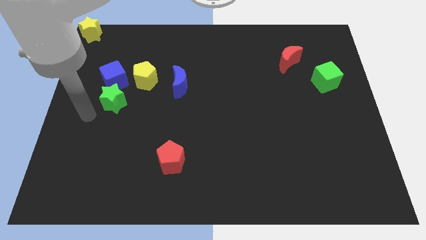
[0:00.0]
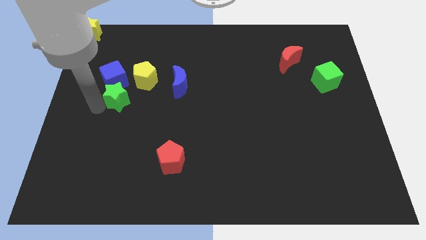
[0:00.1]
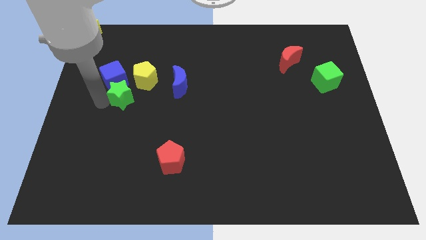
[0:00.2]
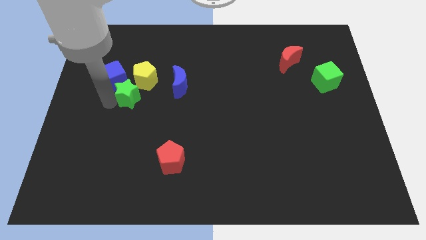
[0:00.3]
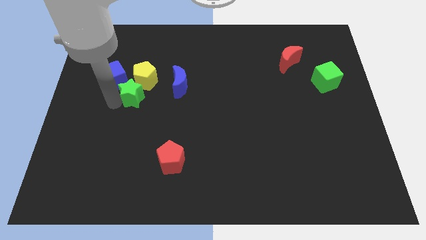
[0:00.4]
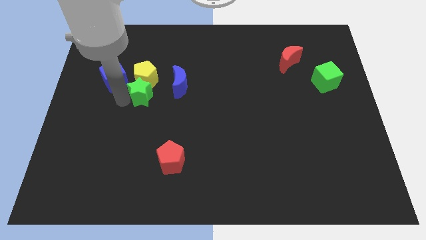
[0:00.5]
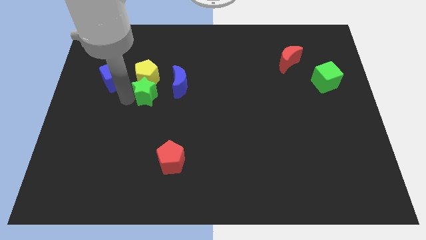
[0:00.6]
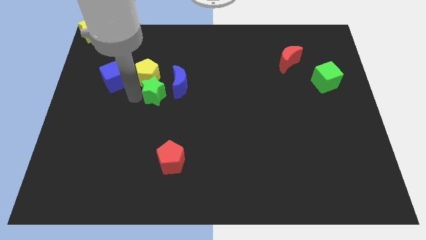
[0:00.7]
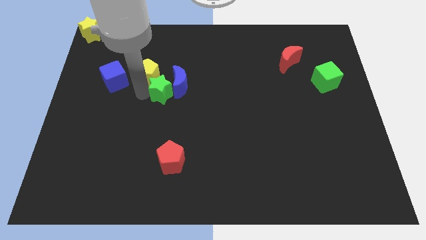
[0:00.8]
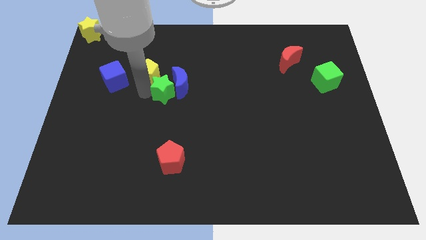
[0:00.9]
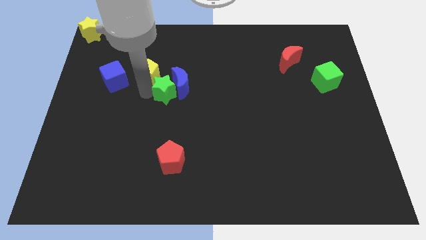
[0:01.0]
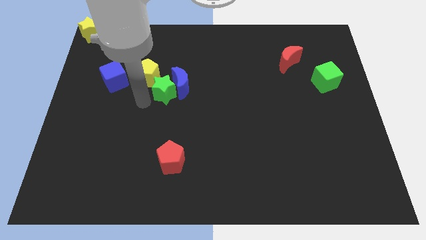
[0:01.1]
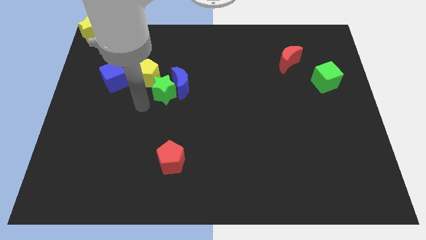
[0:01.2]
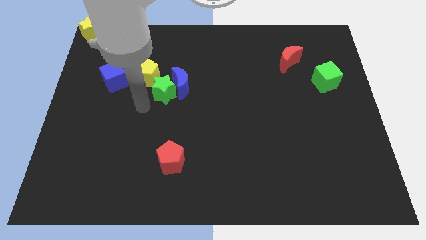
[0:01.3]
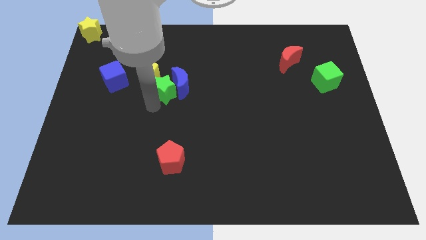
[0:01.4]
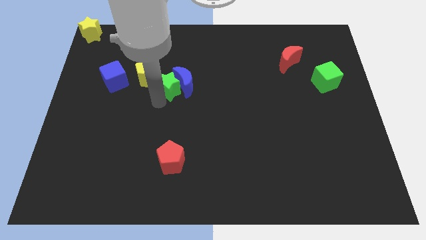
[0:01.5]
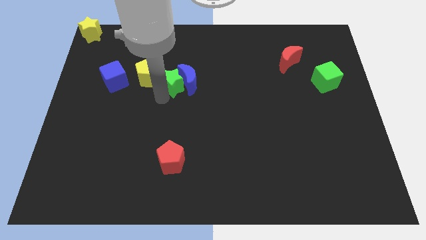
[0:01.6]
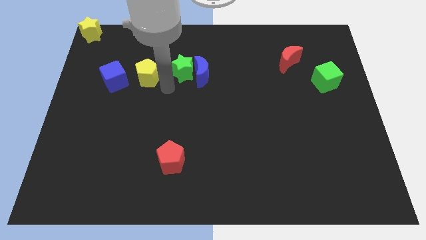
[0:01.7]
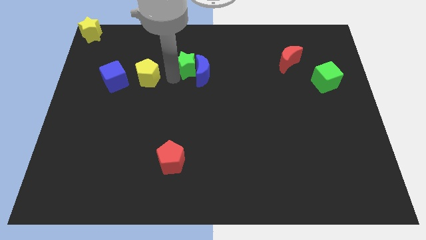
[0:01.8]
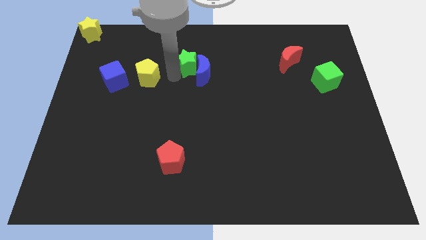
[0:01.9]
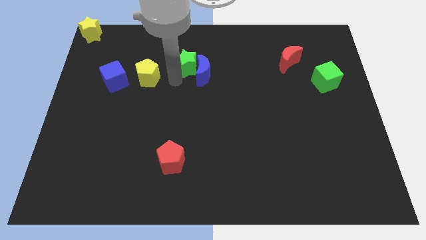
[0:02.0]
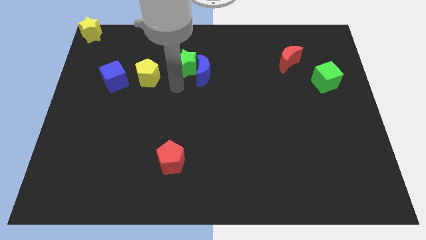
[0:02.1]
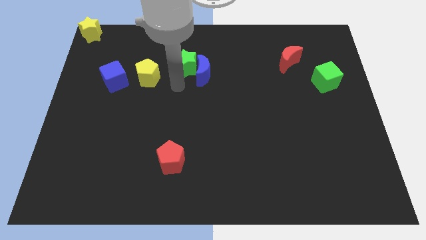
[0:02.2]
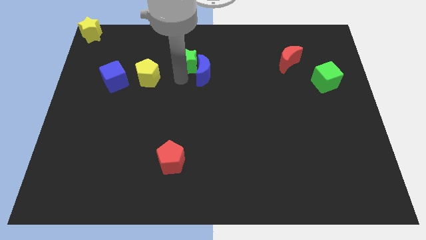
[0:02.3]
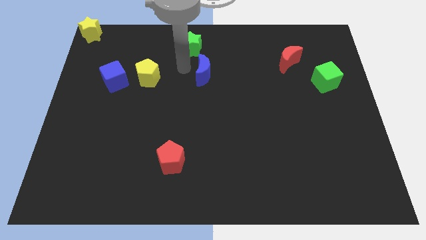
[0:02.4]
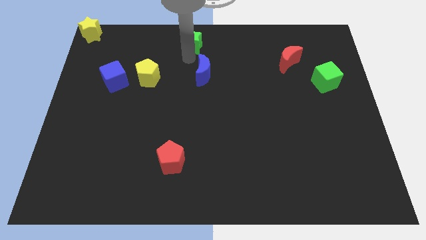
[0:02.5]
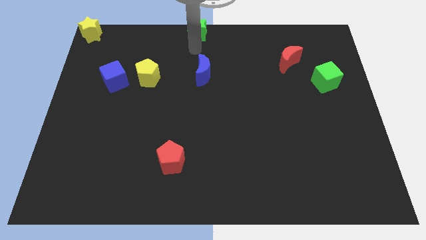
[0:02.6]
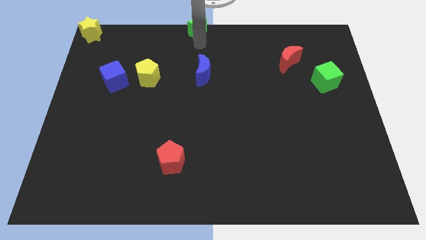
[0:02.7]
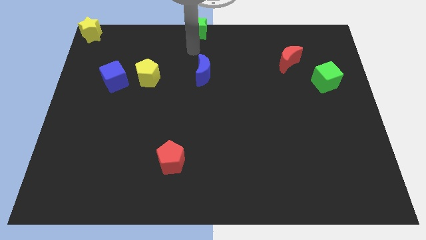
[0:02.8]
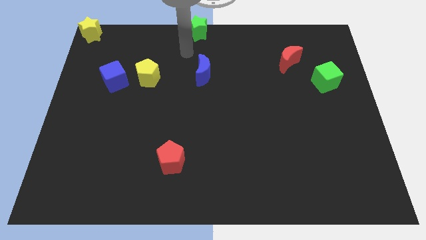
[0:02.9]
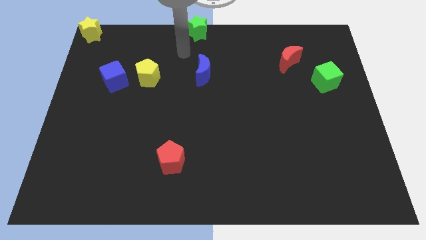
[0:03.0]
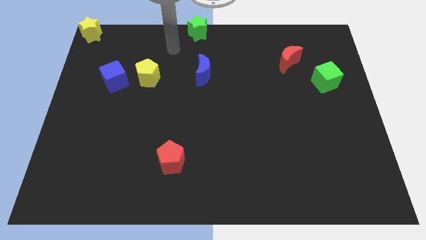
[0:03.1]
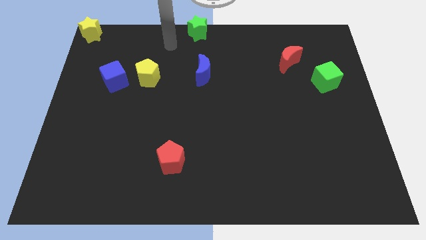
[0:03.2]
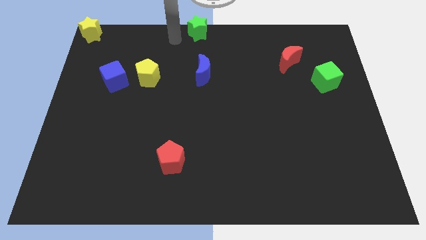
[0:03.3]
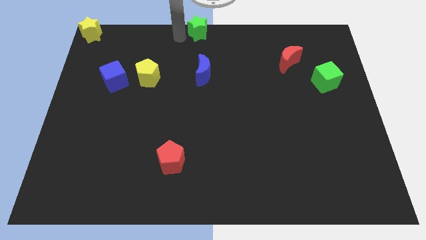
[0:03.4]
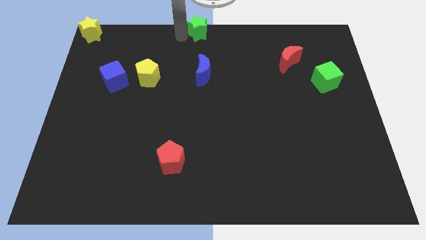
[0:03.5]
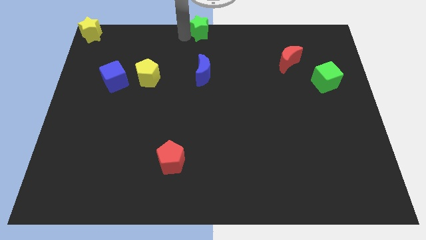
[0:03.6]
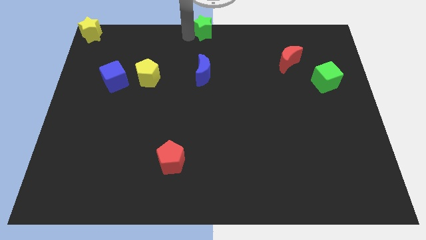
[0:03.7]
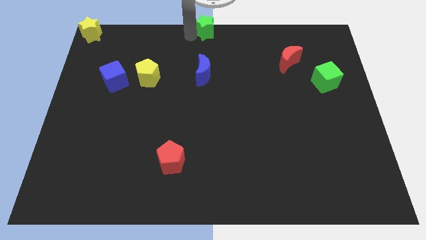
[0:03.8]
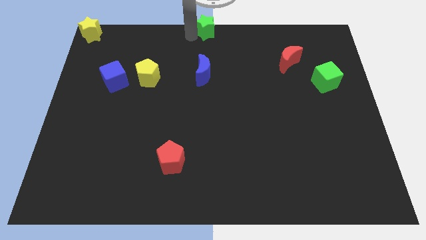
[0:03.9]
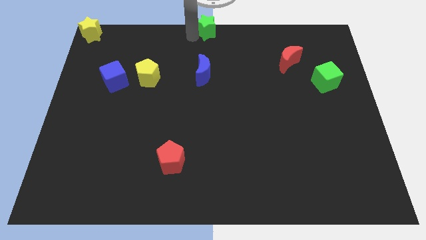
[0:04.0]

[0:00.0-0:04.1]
place green star at the top center

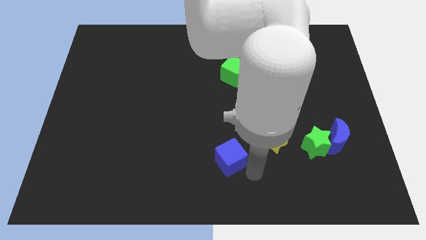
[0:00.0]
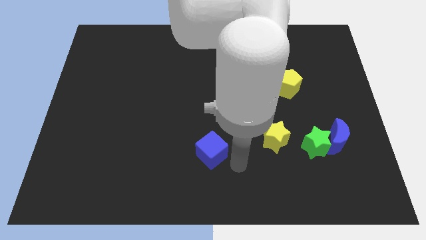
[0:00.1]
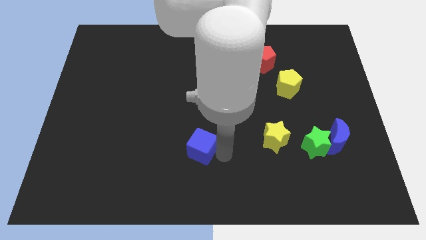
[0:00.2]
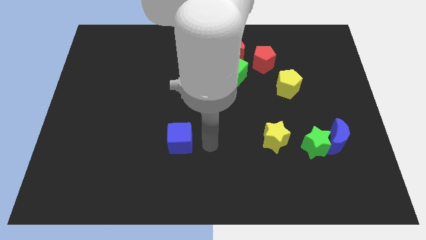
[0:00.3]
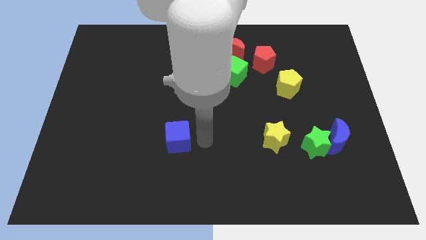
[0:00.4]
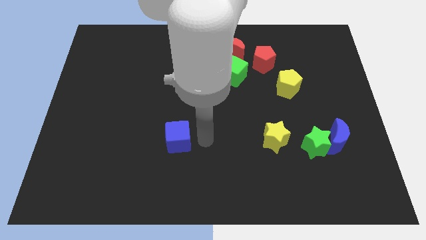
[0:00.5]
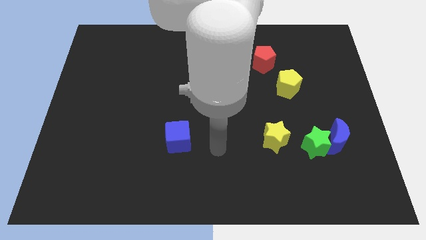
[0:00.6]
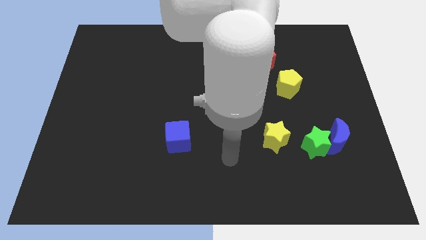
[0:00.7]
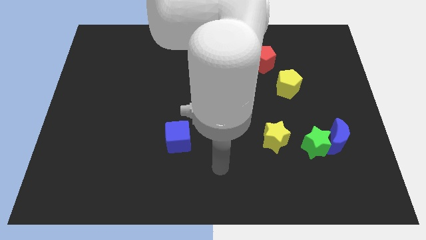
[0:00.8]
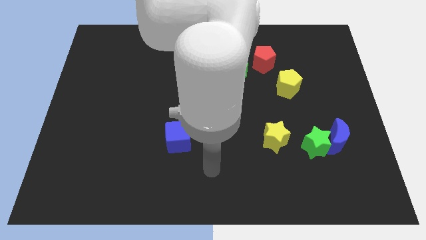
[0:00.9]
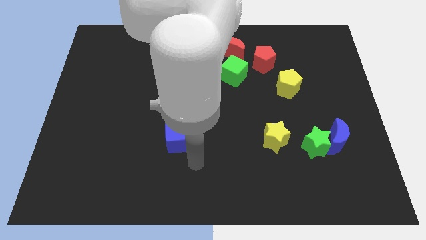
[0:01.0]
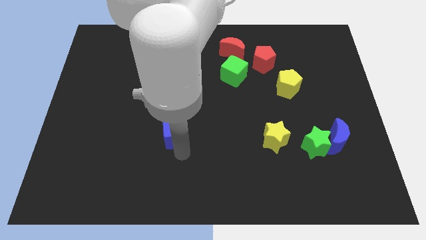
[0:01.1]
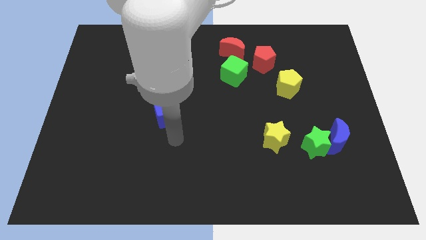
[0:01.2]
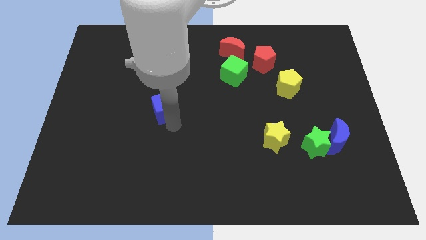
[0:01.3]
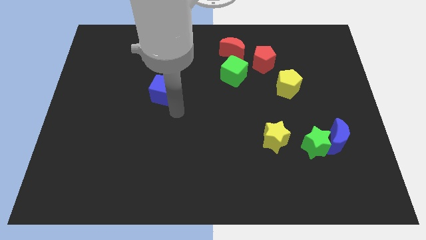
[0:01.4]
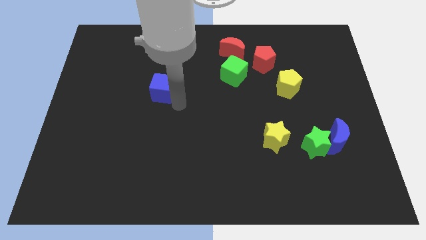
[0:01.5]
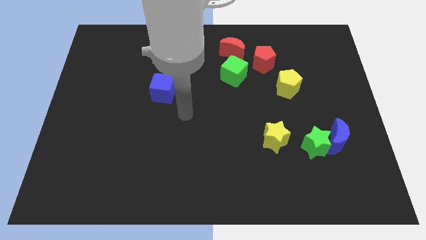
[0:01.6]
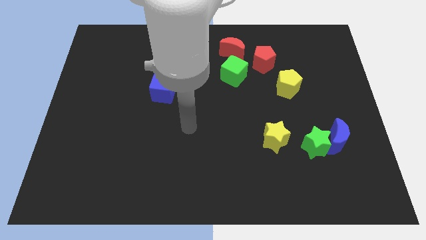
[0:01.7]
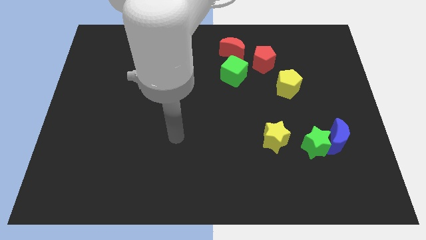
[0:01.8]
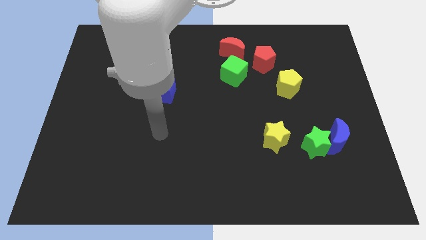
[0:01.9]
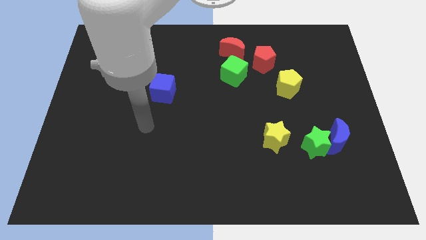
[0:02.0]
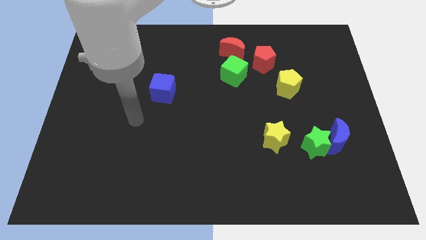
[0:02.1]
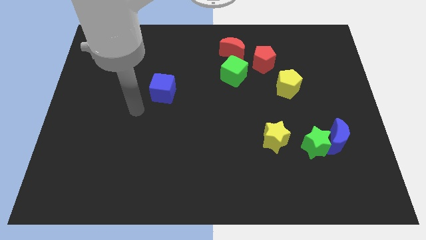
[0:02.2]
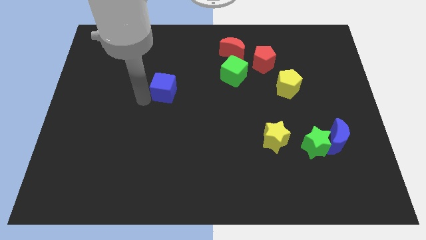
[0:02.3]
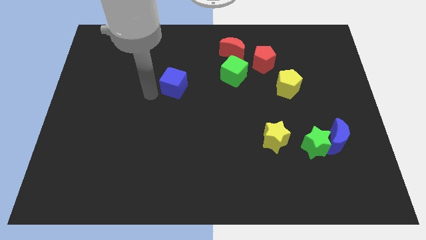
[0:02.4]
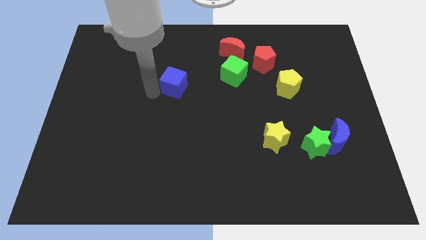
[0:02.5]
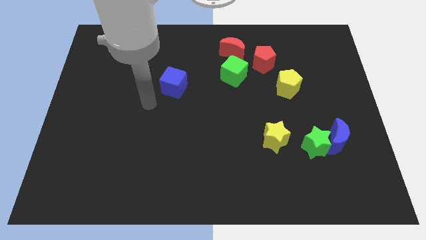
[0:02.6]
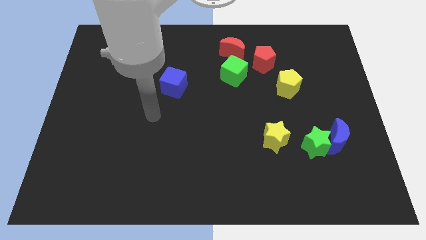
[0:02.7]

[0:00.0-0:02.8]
place the blue cube to the left of green cube

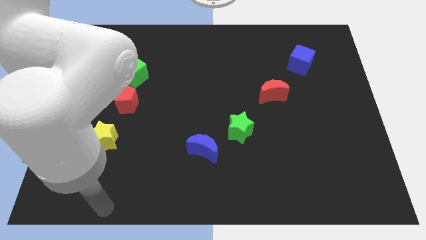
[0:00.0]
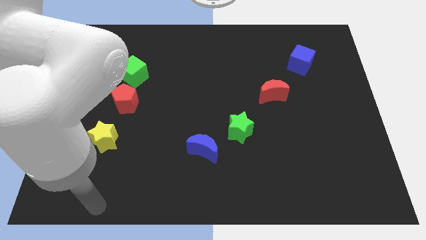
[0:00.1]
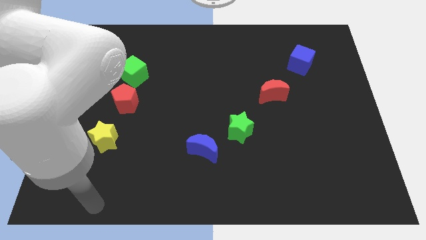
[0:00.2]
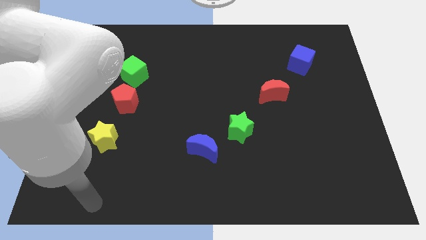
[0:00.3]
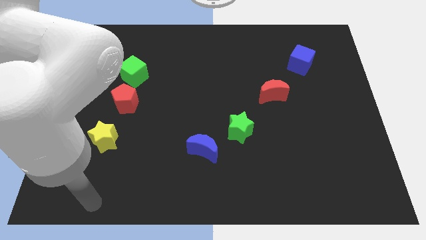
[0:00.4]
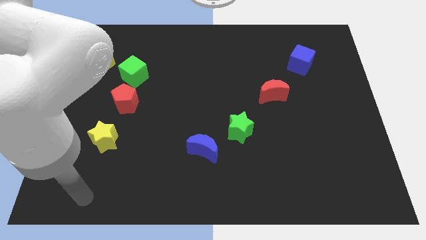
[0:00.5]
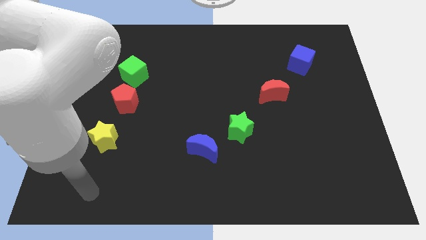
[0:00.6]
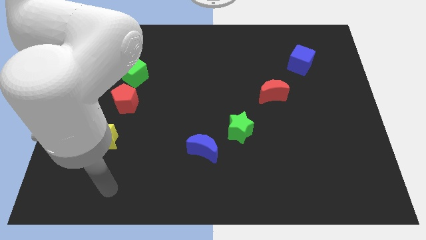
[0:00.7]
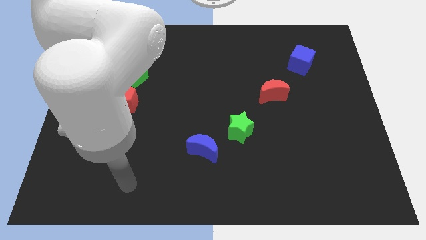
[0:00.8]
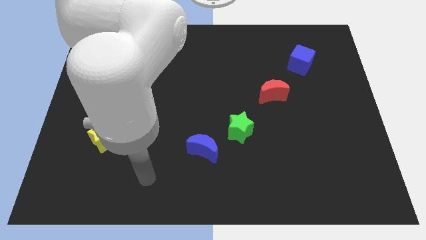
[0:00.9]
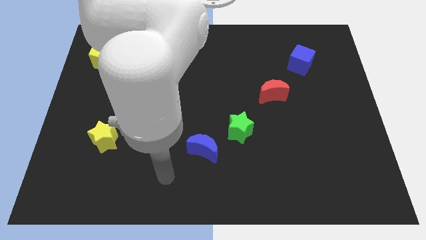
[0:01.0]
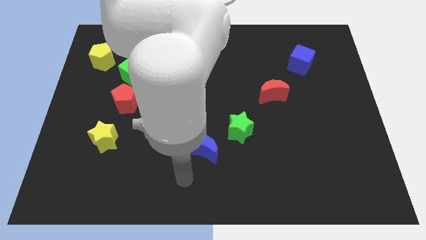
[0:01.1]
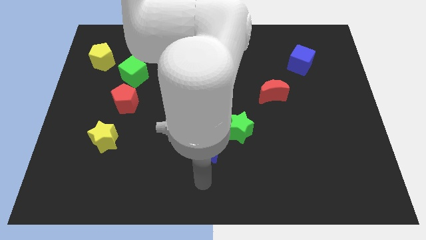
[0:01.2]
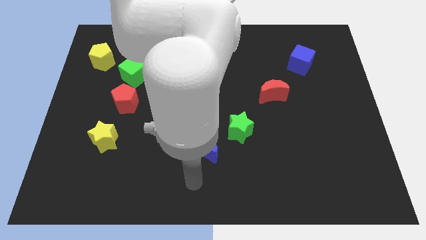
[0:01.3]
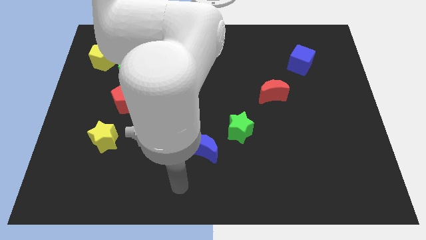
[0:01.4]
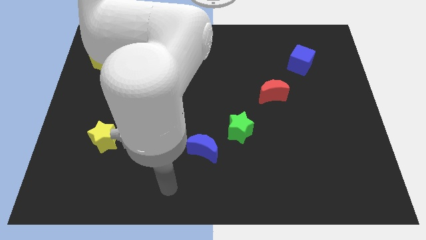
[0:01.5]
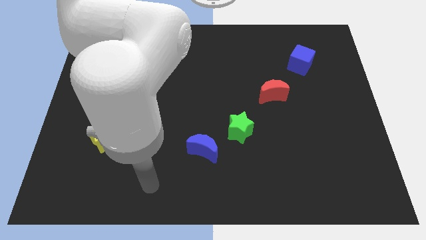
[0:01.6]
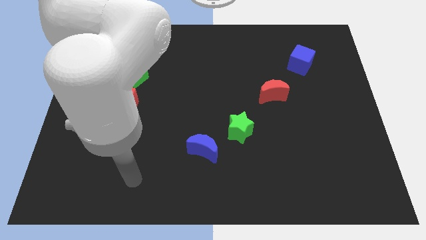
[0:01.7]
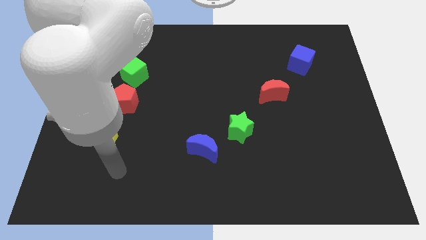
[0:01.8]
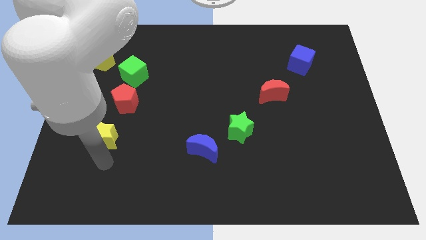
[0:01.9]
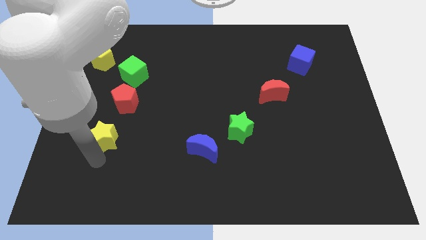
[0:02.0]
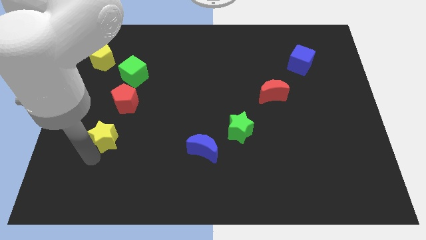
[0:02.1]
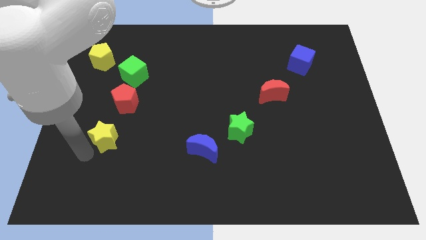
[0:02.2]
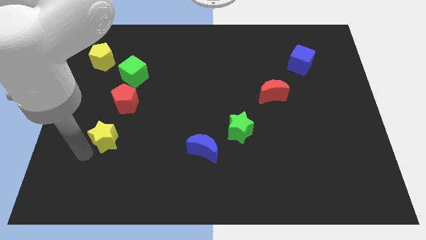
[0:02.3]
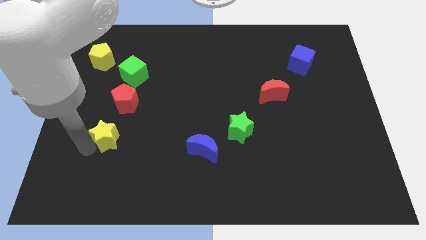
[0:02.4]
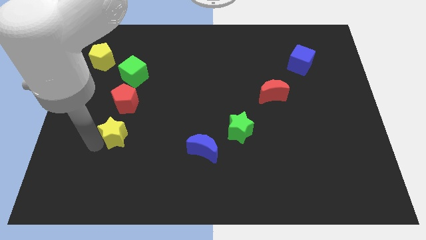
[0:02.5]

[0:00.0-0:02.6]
push yellow start slight upwards
